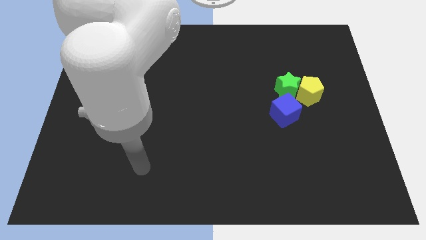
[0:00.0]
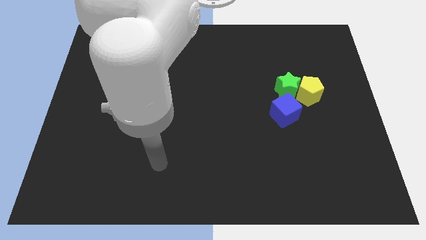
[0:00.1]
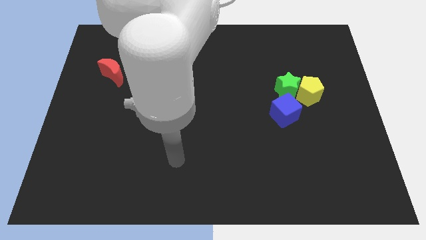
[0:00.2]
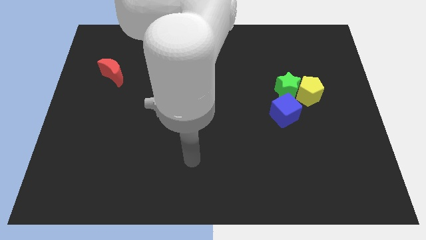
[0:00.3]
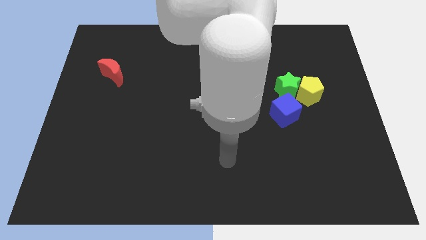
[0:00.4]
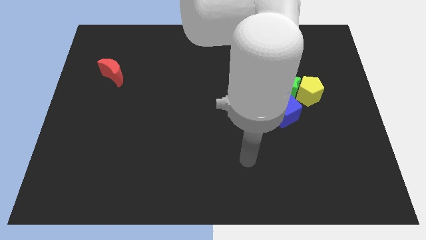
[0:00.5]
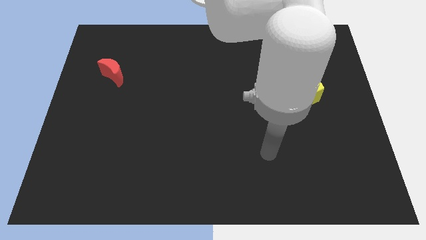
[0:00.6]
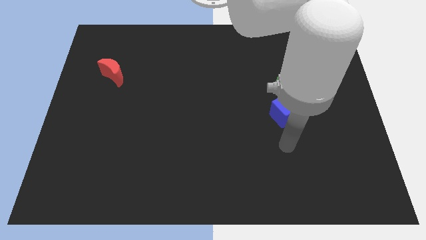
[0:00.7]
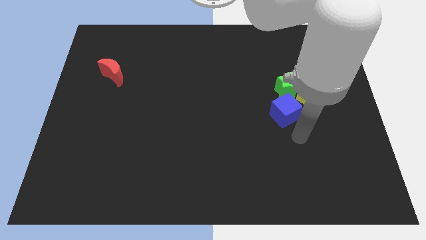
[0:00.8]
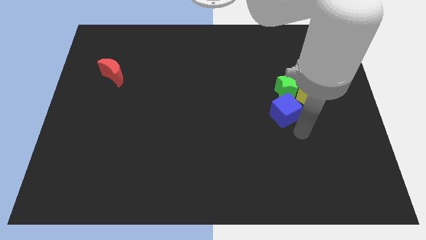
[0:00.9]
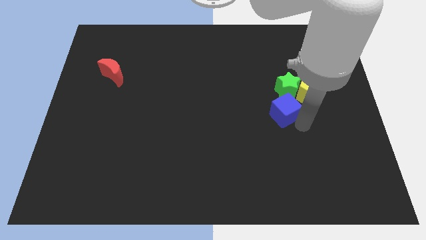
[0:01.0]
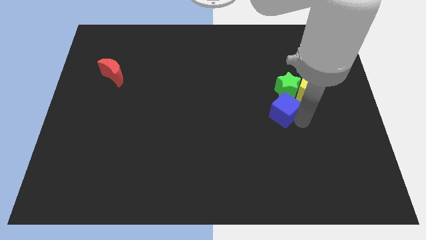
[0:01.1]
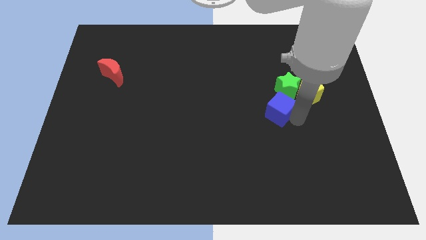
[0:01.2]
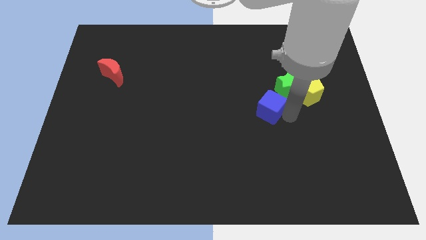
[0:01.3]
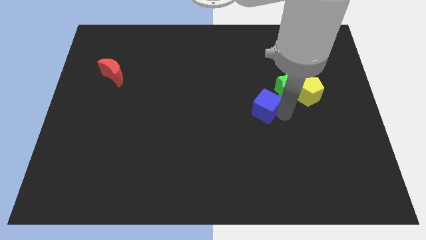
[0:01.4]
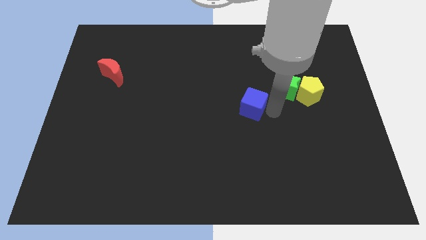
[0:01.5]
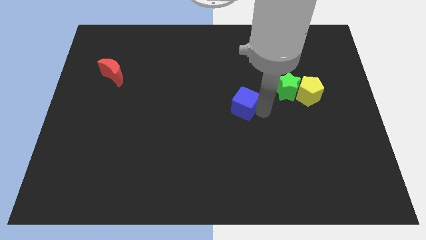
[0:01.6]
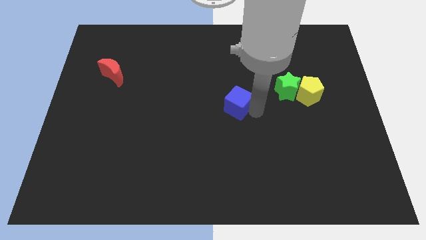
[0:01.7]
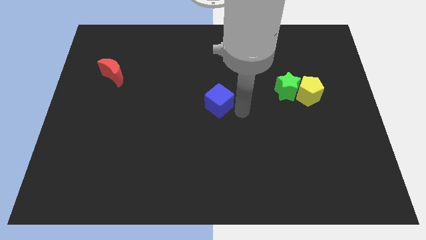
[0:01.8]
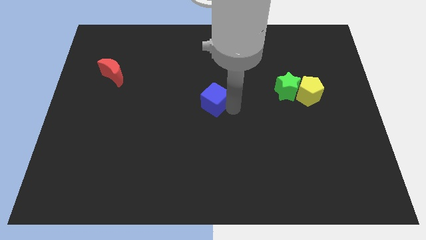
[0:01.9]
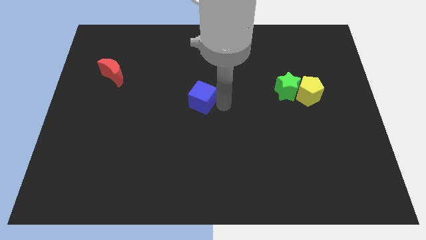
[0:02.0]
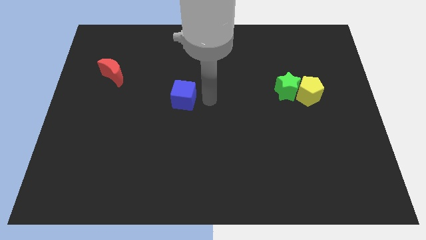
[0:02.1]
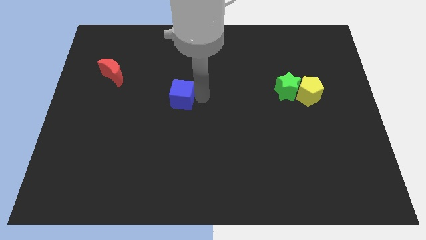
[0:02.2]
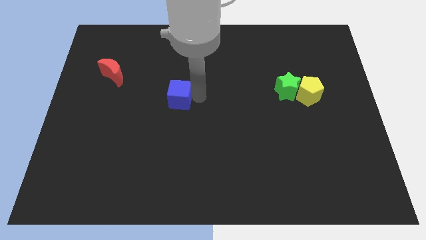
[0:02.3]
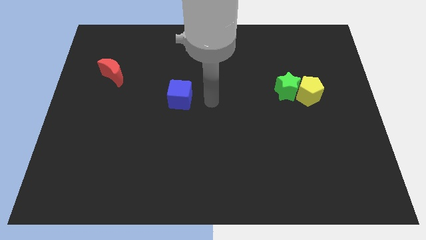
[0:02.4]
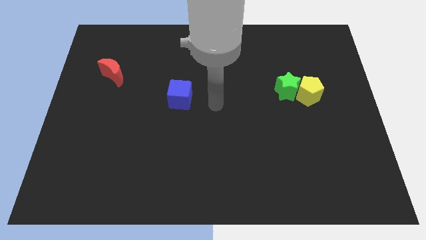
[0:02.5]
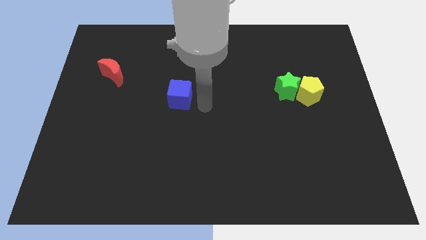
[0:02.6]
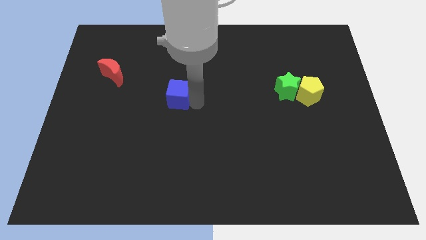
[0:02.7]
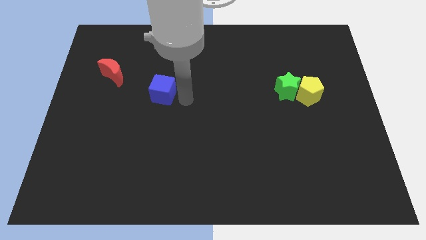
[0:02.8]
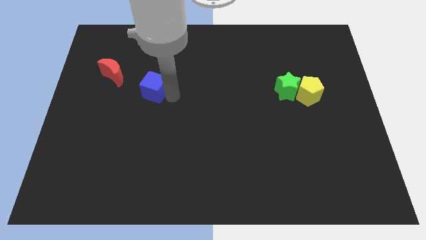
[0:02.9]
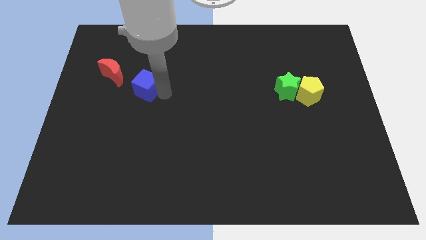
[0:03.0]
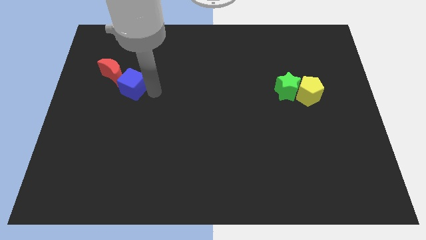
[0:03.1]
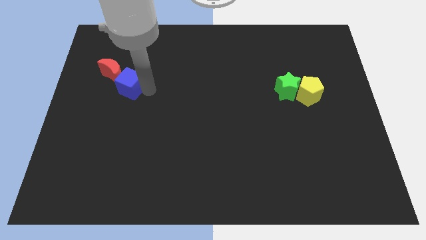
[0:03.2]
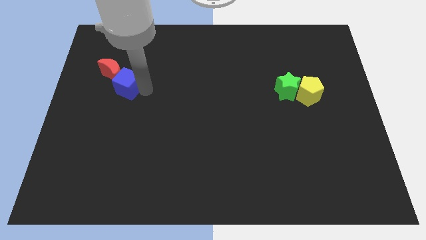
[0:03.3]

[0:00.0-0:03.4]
push the blue cube close to the moon

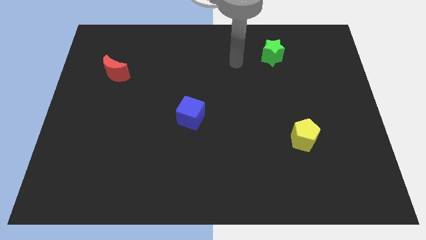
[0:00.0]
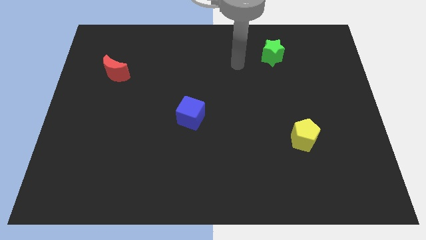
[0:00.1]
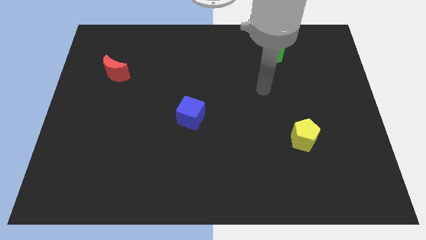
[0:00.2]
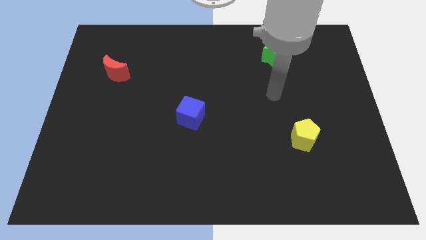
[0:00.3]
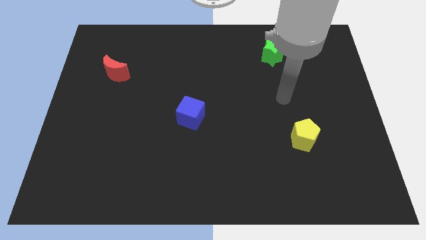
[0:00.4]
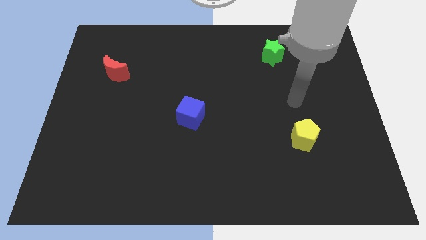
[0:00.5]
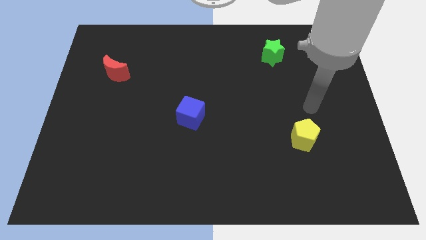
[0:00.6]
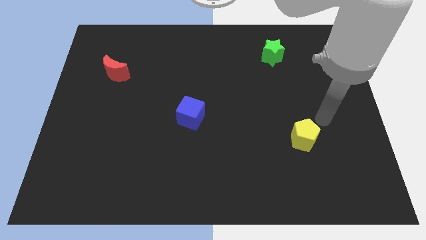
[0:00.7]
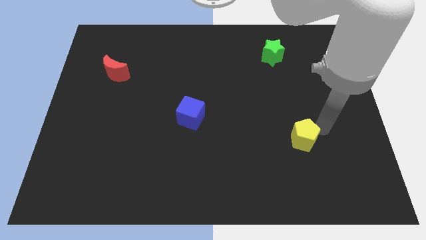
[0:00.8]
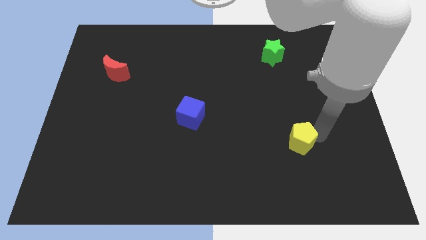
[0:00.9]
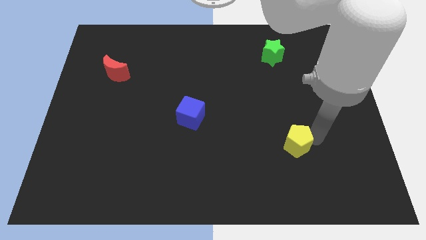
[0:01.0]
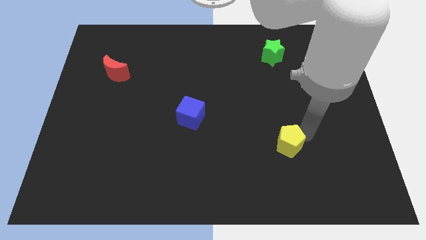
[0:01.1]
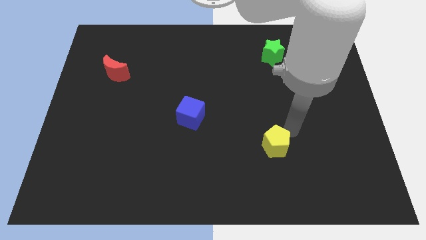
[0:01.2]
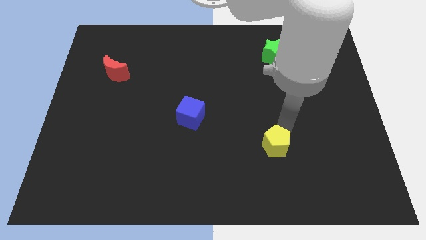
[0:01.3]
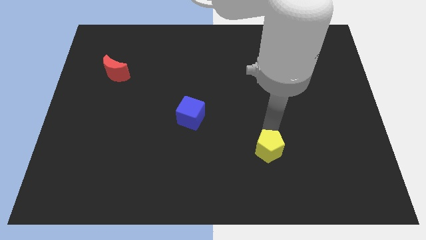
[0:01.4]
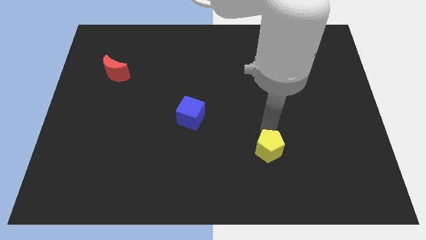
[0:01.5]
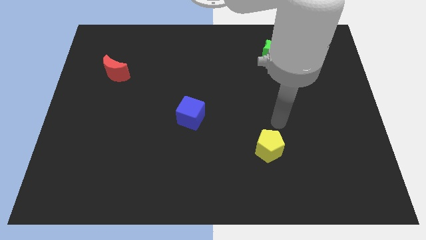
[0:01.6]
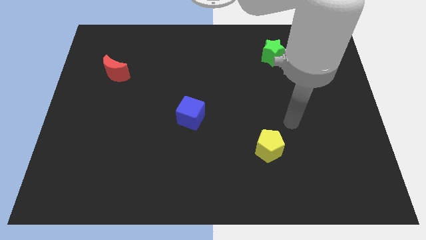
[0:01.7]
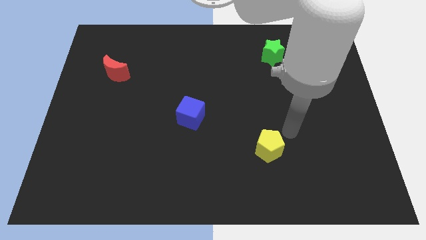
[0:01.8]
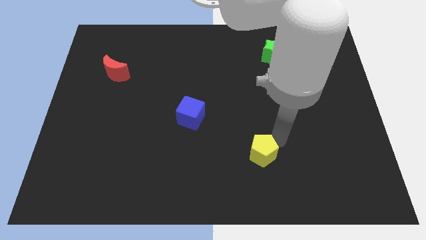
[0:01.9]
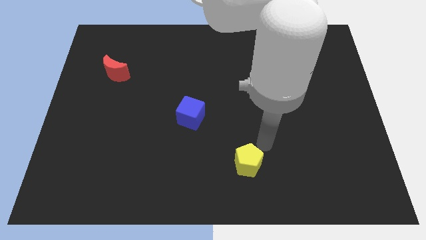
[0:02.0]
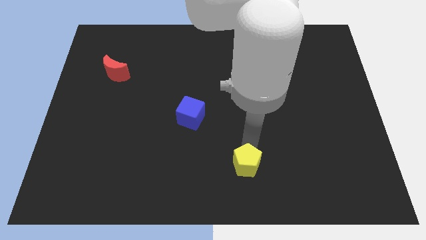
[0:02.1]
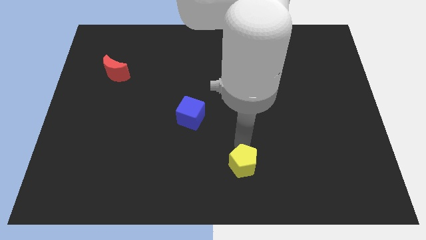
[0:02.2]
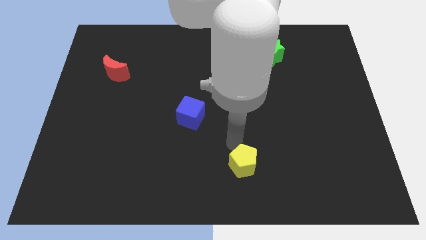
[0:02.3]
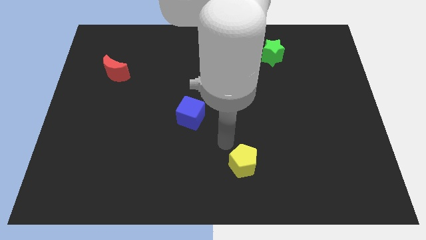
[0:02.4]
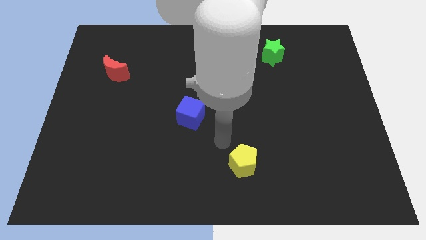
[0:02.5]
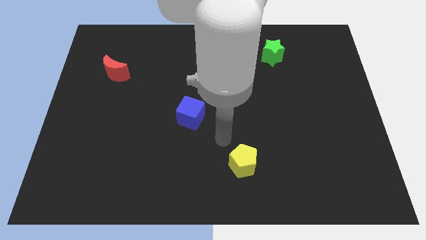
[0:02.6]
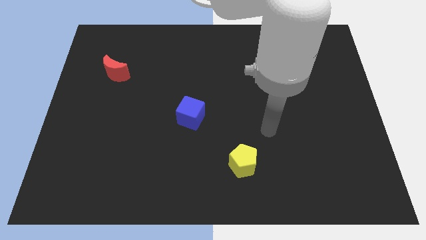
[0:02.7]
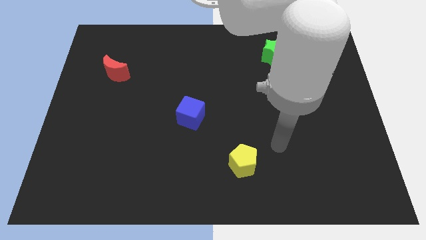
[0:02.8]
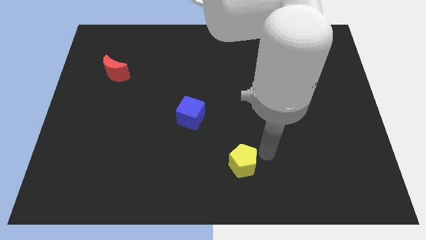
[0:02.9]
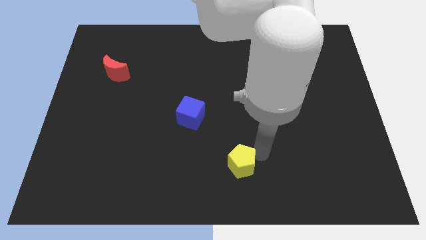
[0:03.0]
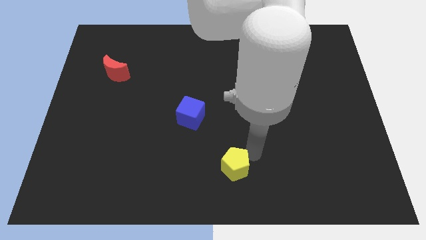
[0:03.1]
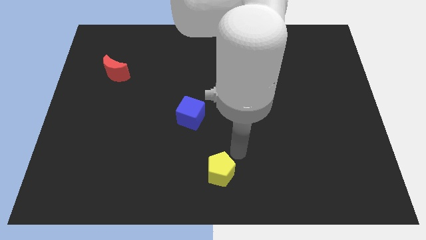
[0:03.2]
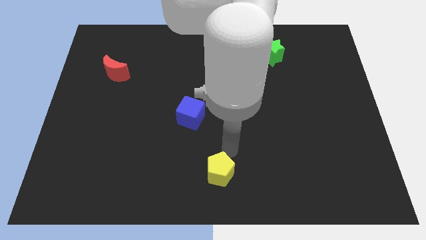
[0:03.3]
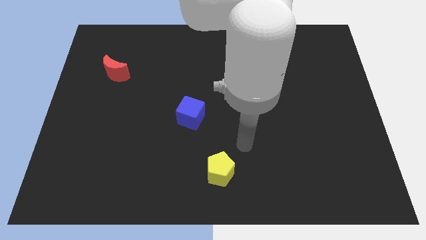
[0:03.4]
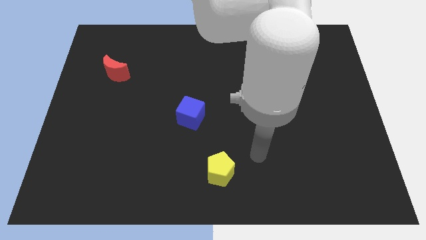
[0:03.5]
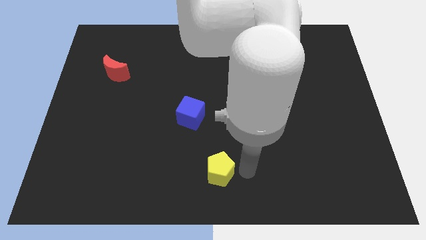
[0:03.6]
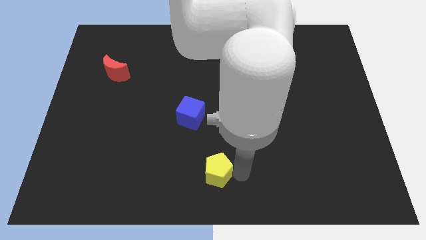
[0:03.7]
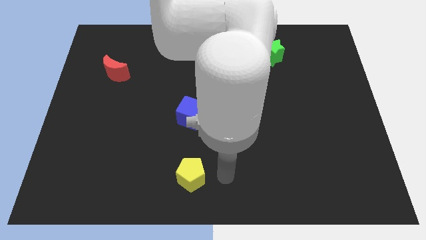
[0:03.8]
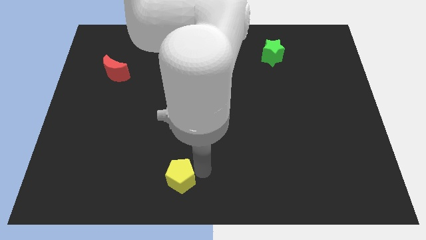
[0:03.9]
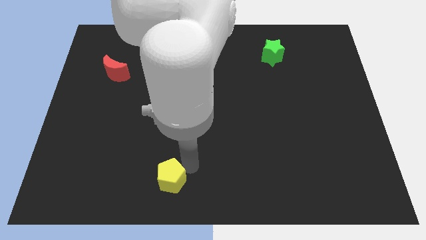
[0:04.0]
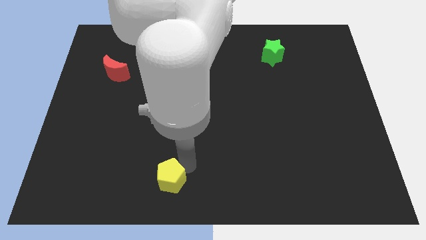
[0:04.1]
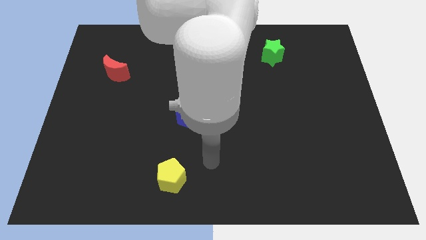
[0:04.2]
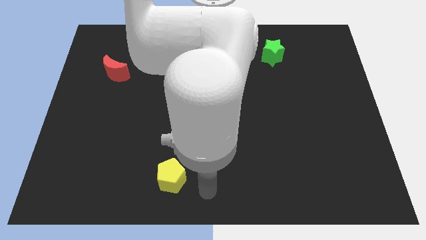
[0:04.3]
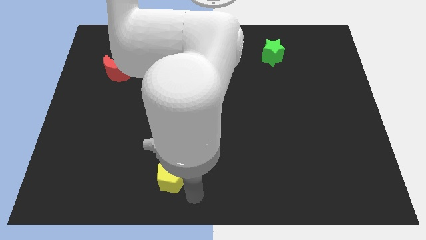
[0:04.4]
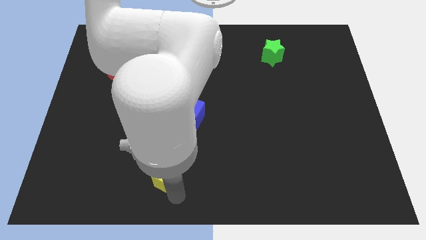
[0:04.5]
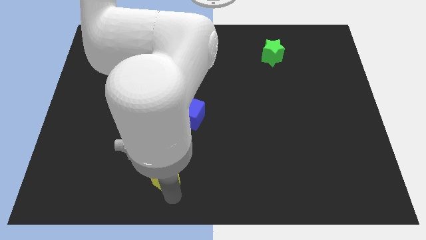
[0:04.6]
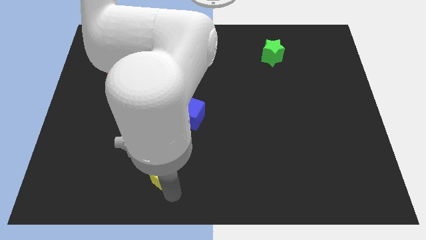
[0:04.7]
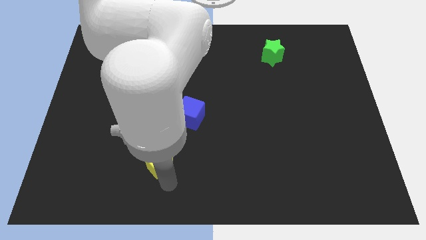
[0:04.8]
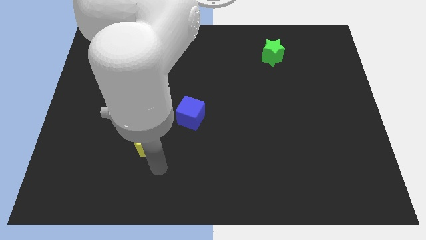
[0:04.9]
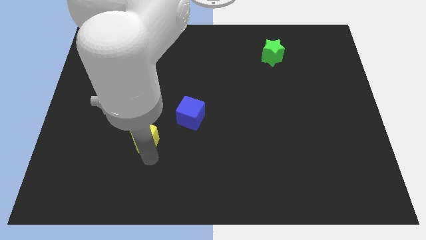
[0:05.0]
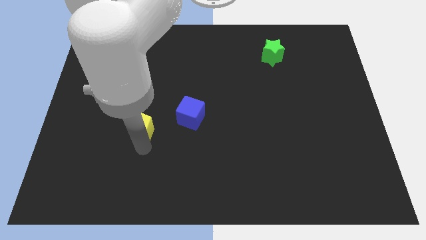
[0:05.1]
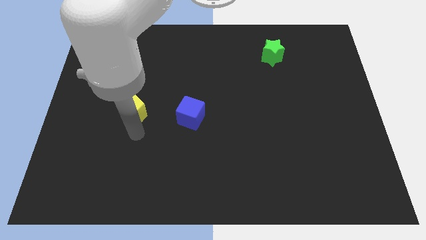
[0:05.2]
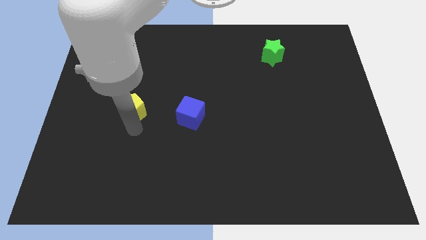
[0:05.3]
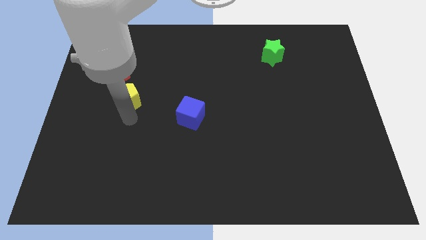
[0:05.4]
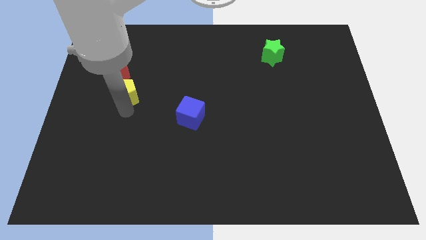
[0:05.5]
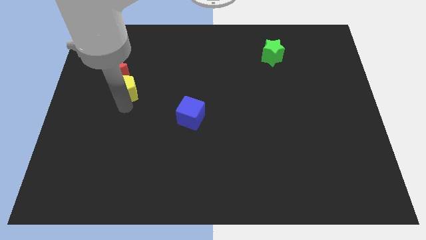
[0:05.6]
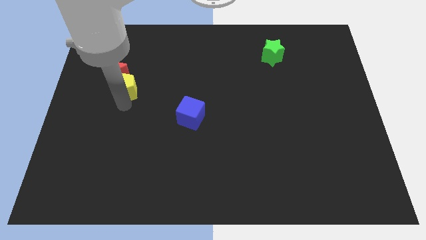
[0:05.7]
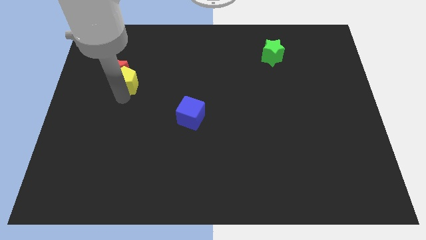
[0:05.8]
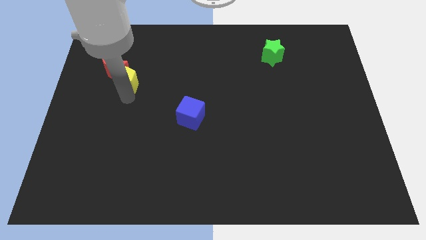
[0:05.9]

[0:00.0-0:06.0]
push the yellow pentagon to the red block
